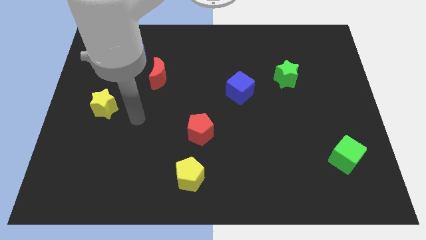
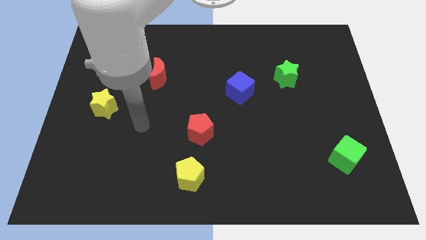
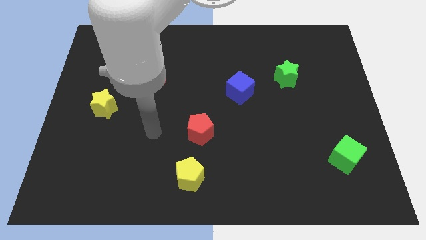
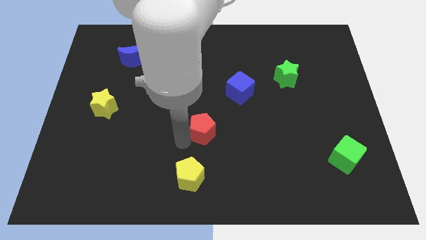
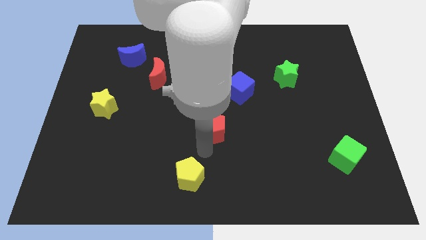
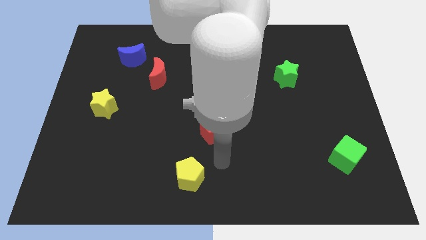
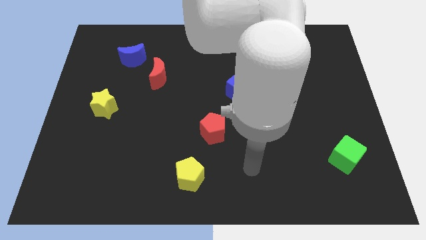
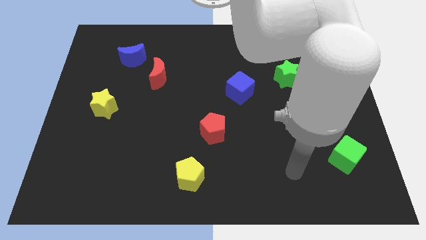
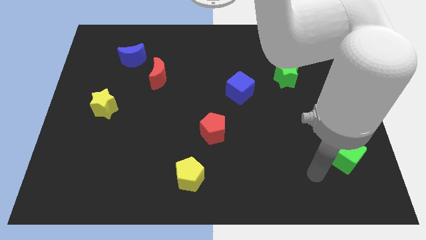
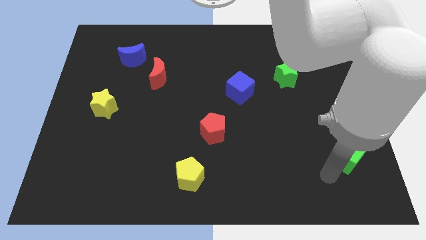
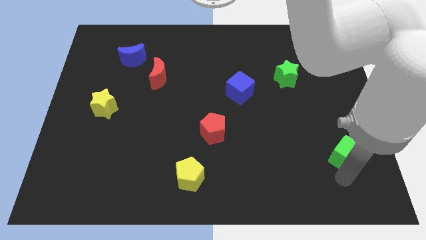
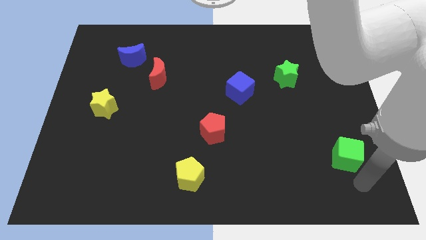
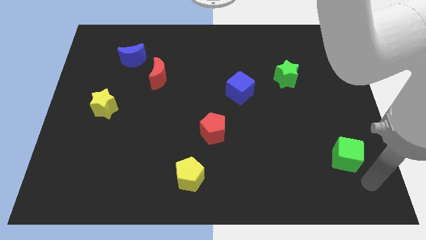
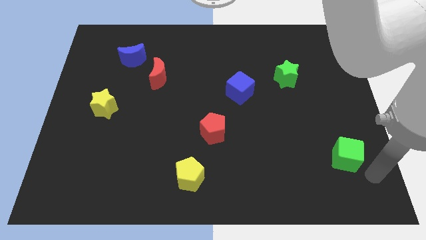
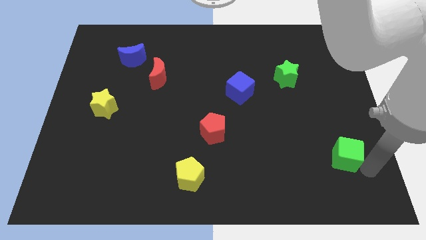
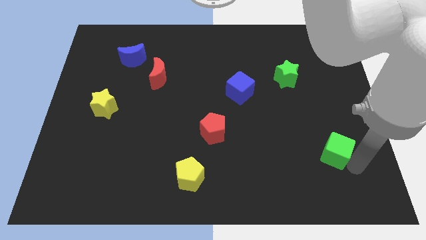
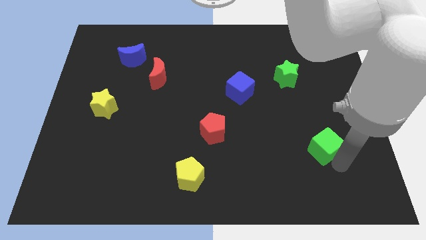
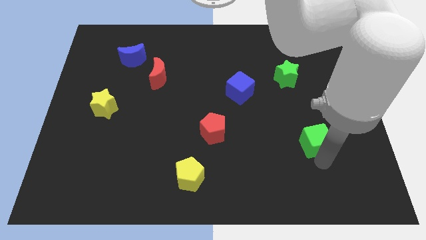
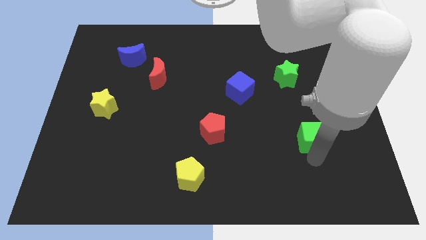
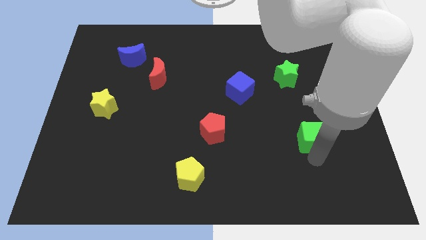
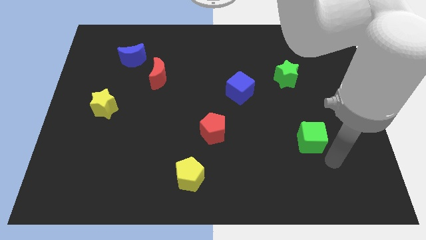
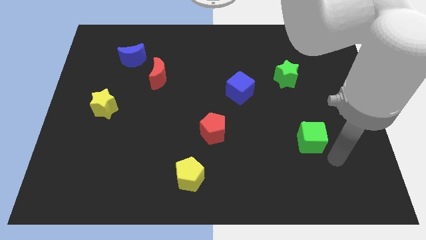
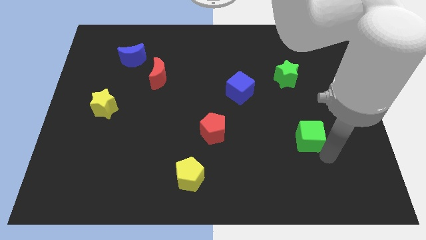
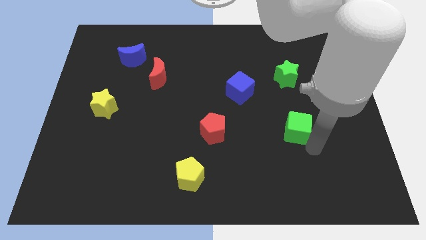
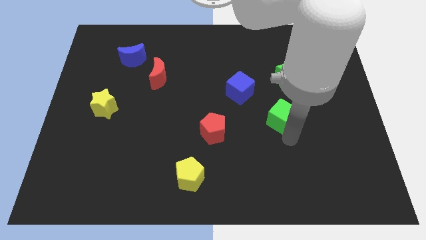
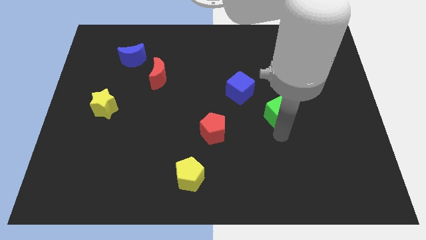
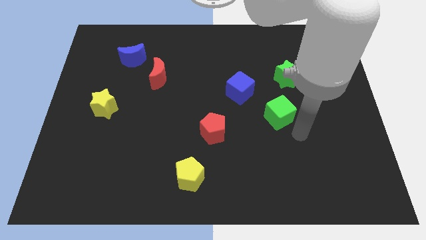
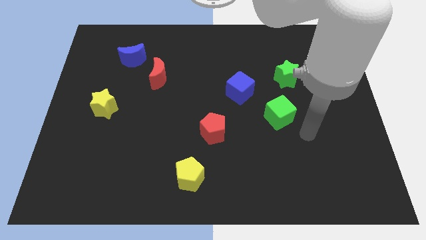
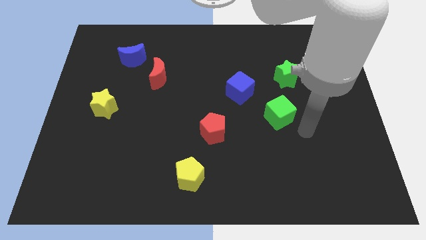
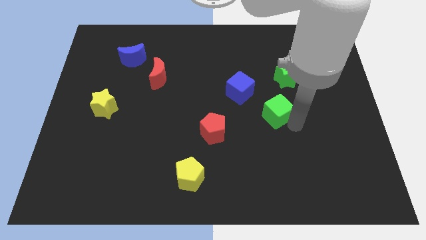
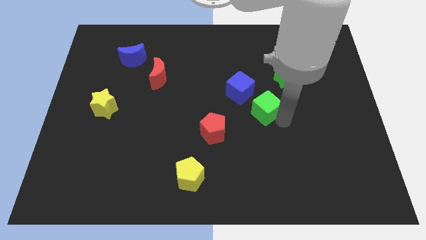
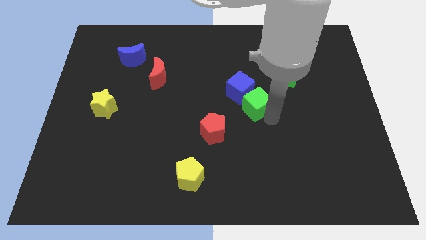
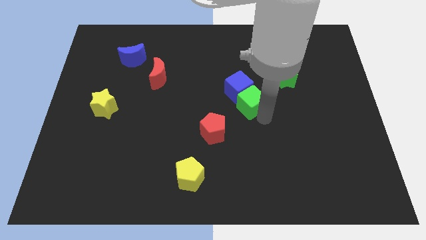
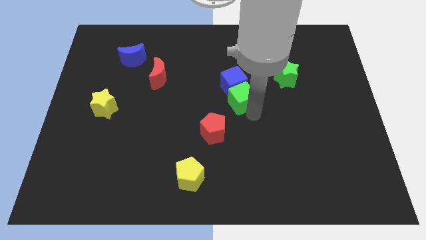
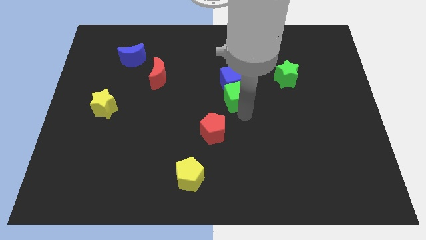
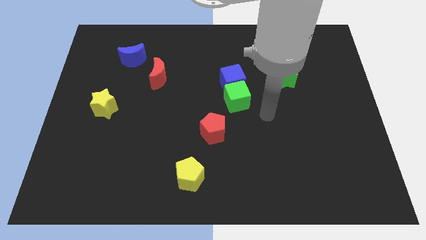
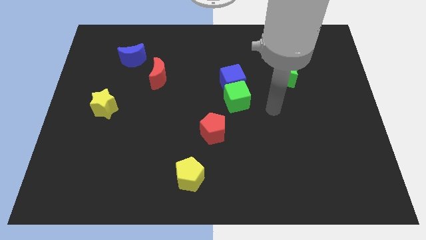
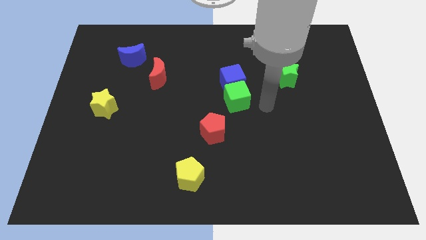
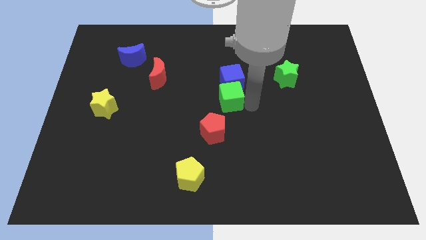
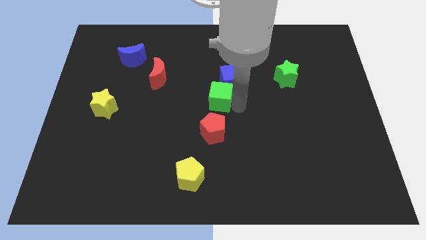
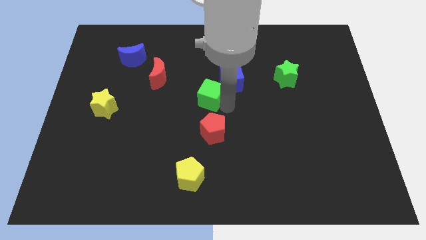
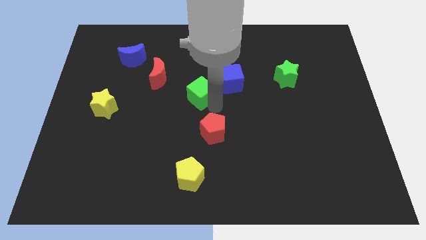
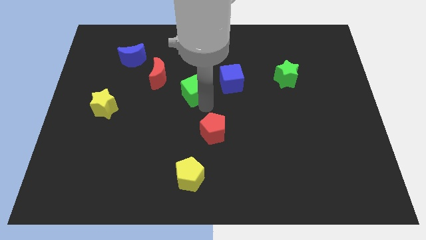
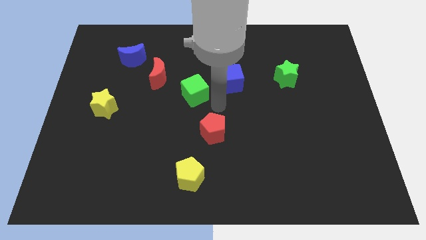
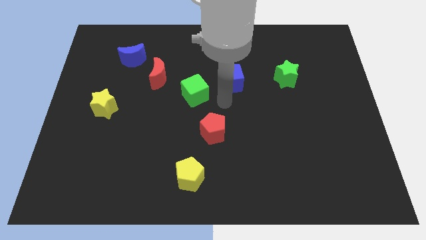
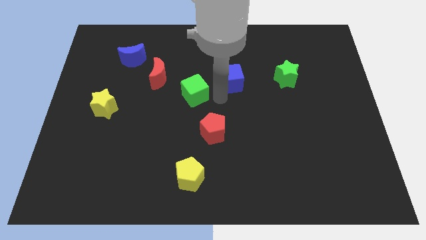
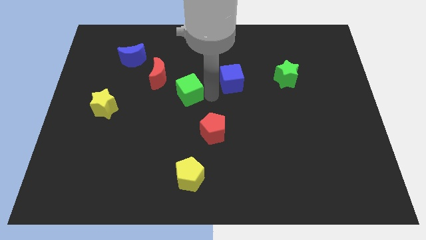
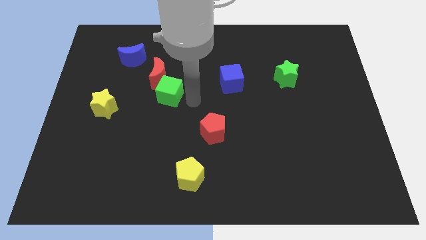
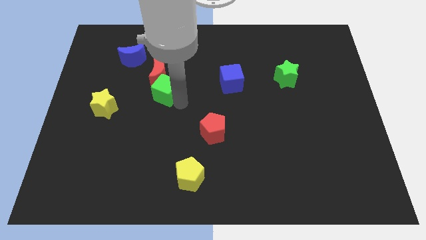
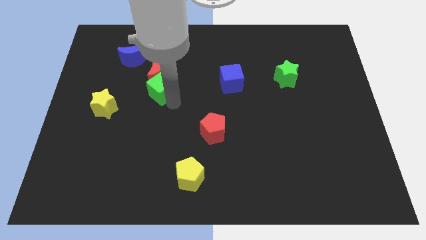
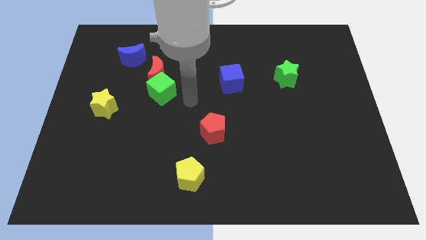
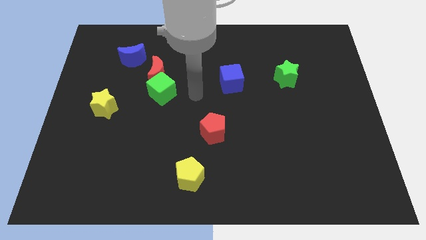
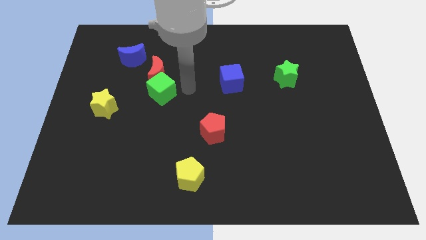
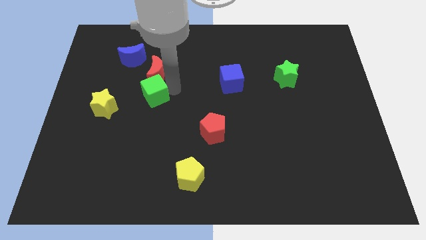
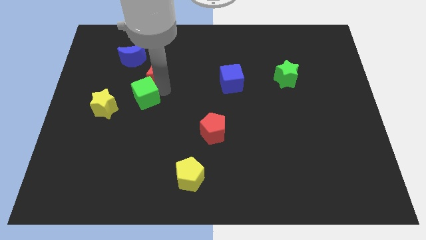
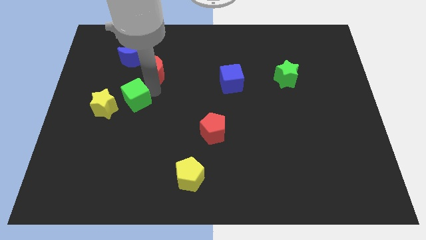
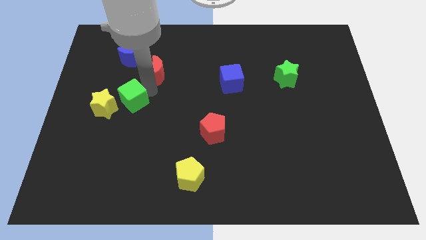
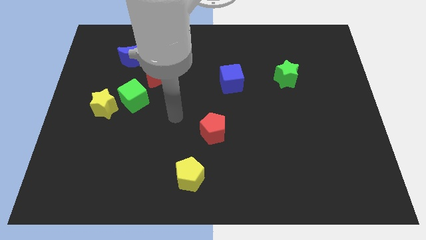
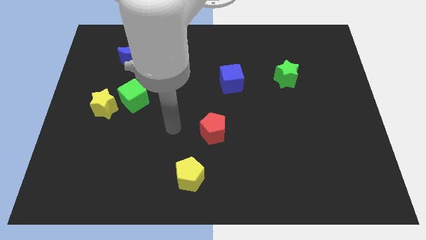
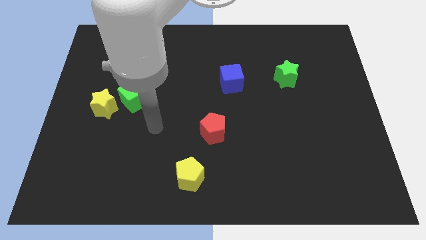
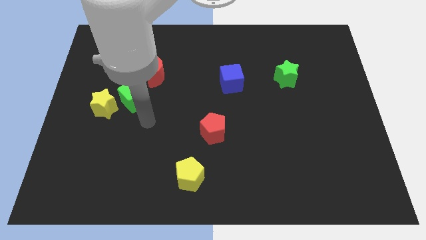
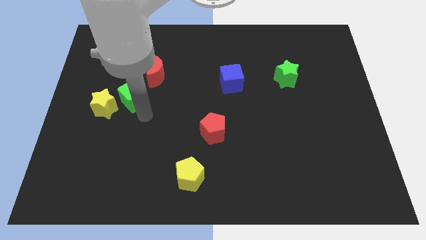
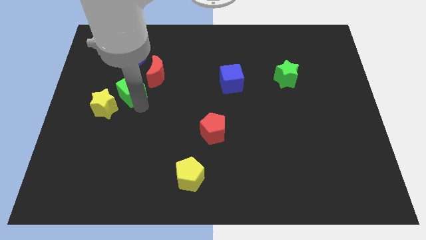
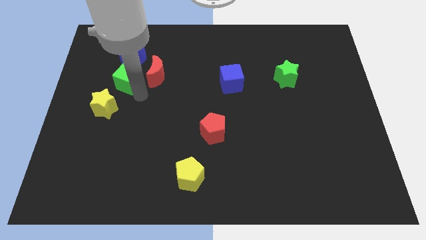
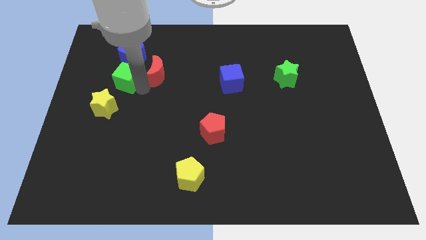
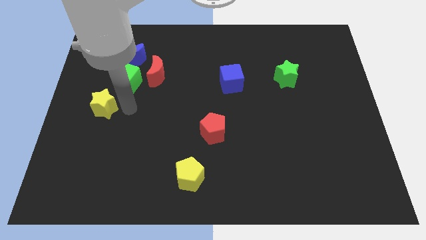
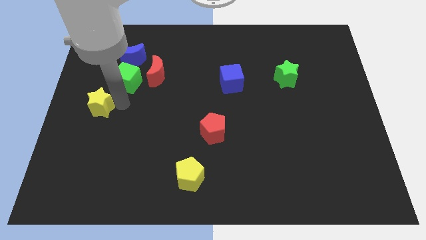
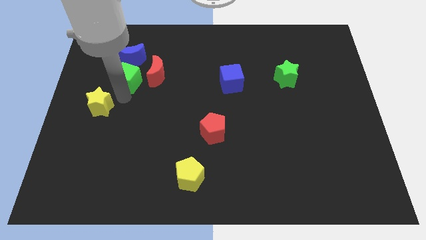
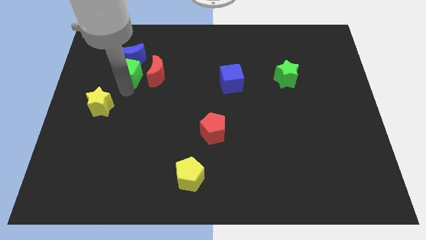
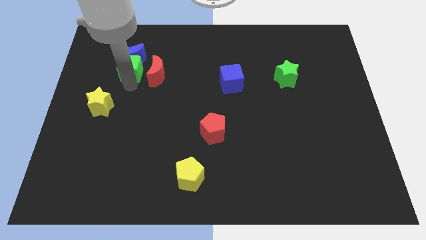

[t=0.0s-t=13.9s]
put the green cube to the blue moon

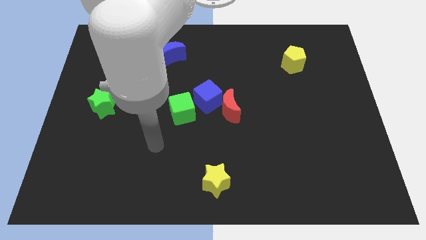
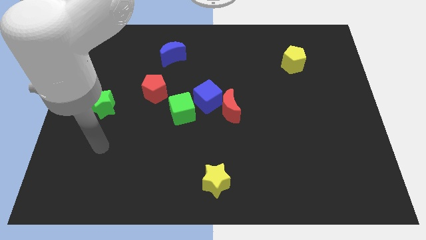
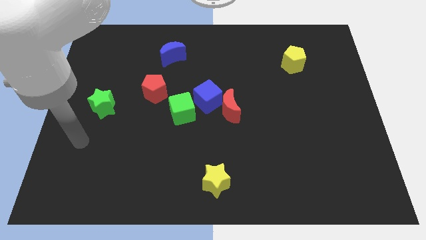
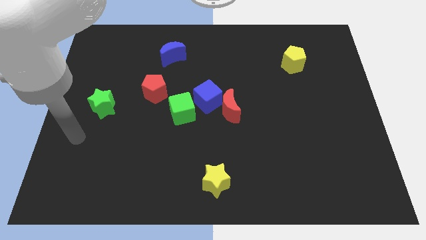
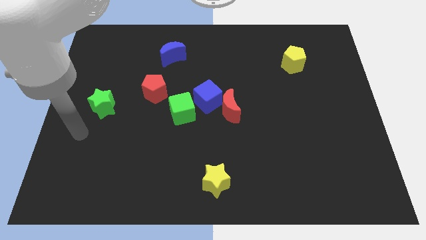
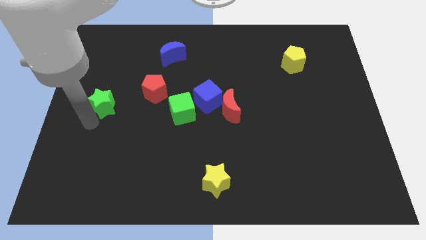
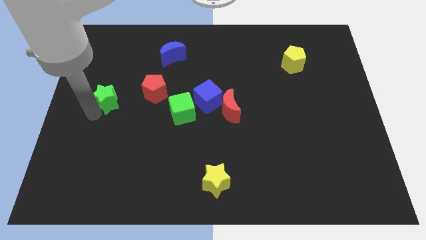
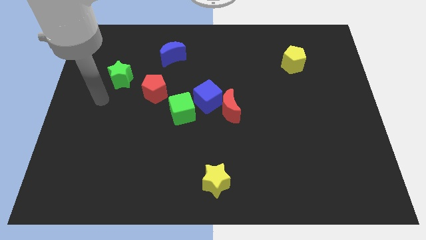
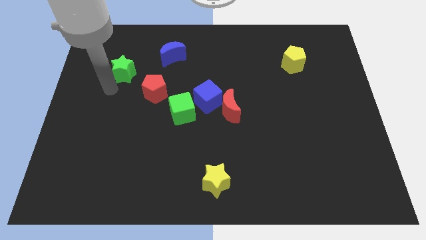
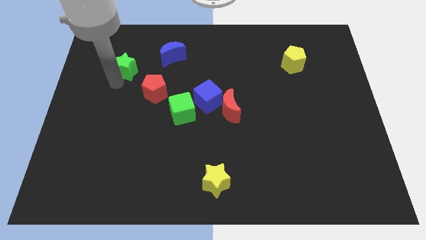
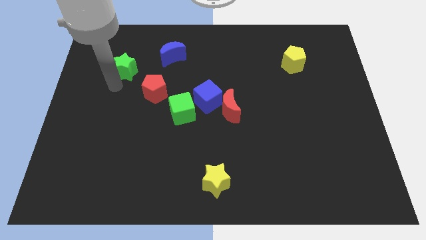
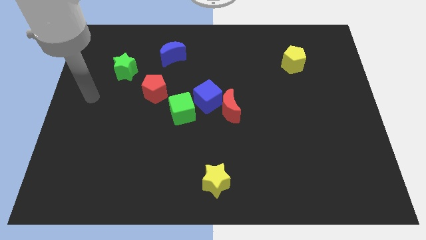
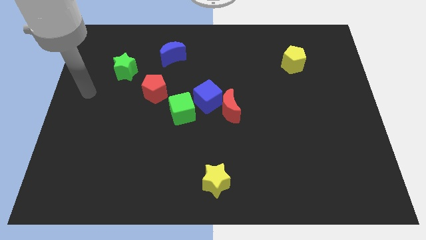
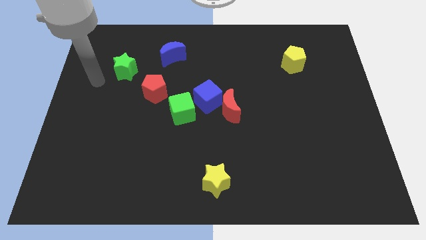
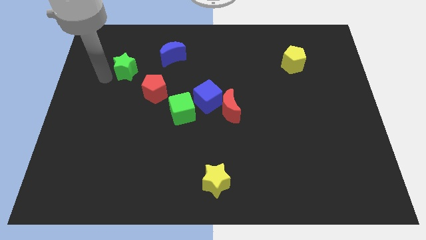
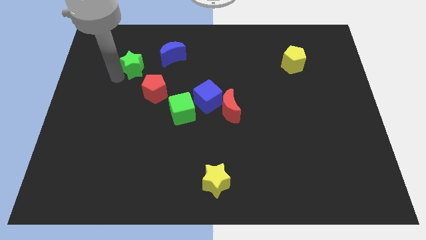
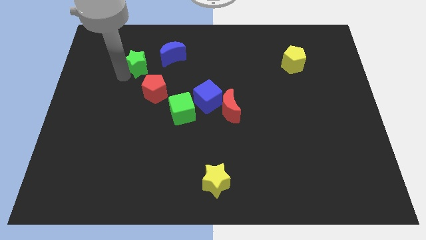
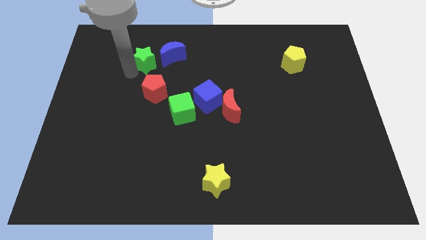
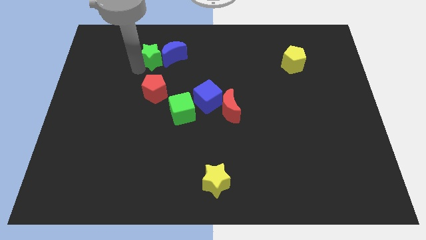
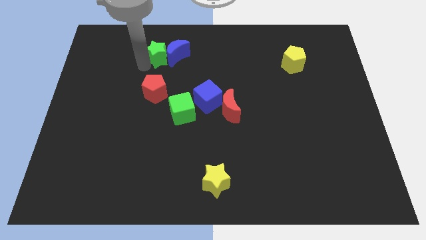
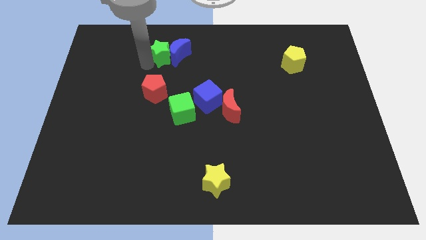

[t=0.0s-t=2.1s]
put the green star towards the blue moon
